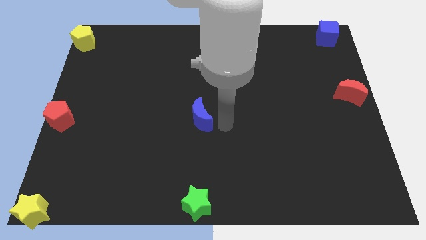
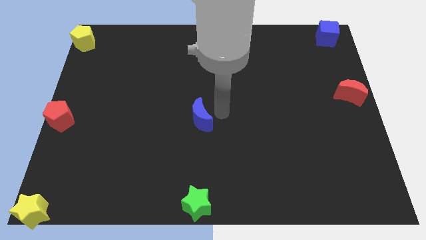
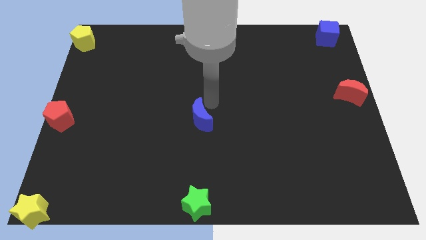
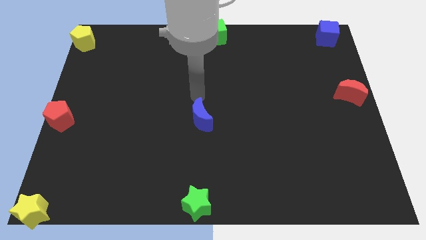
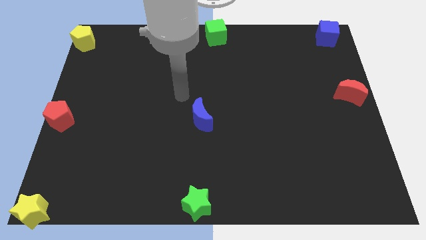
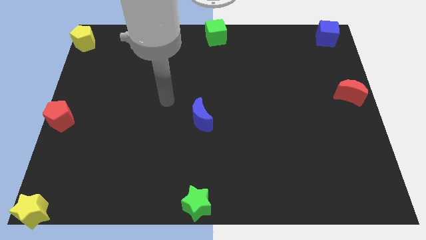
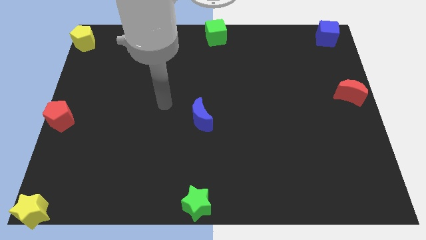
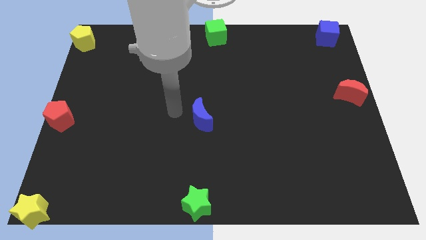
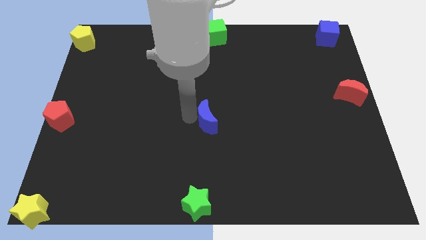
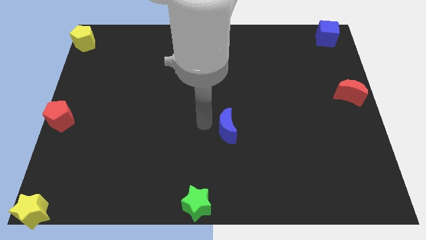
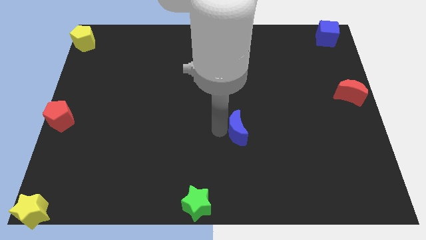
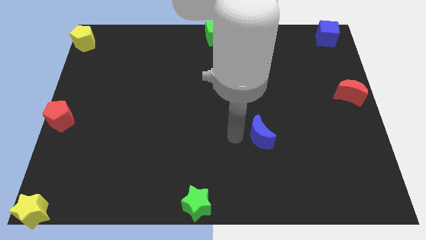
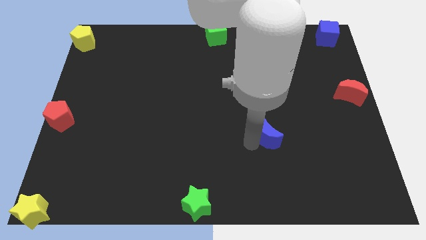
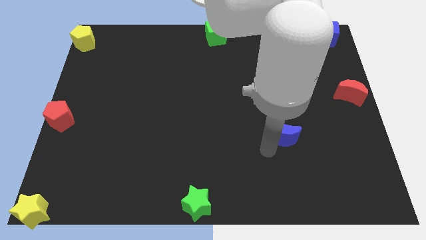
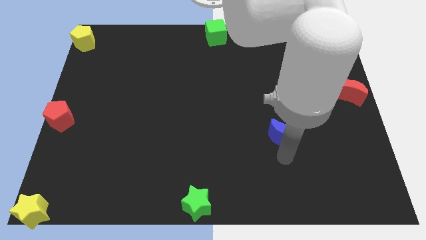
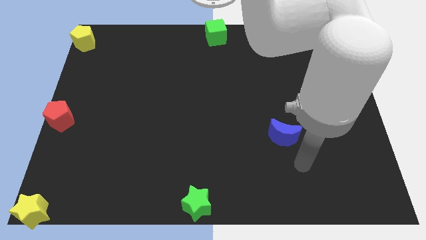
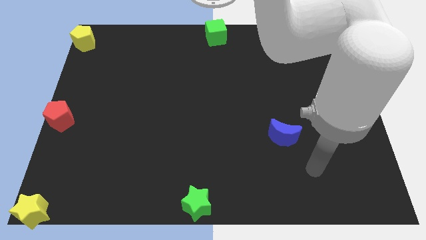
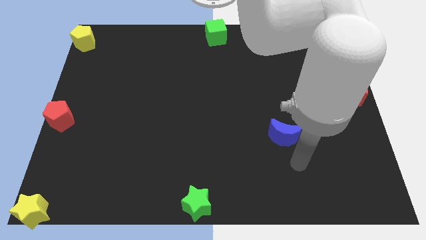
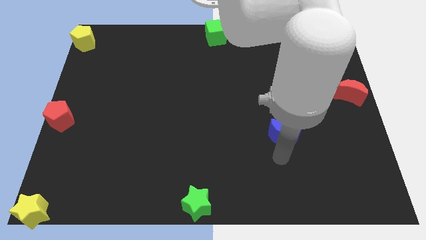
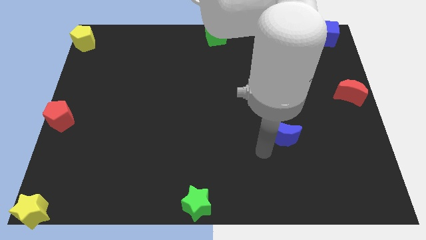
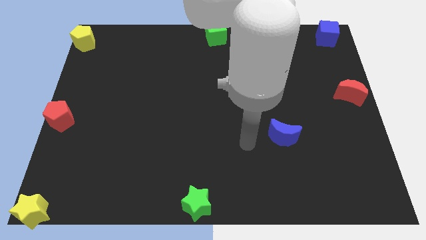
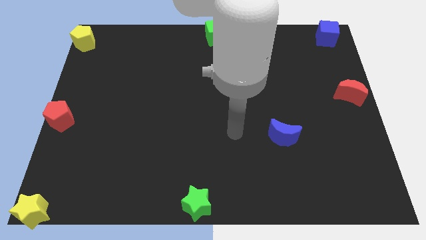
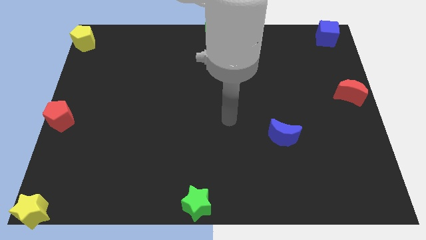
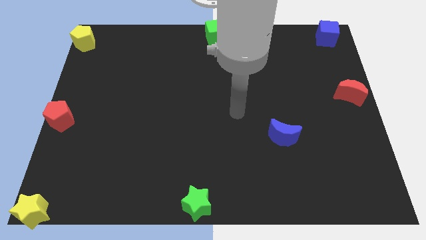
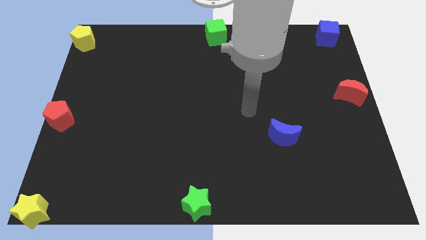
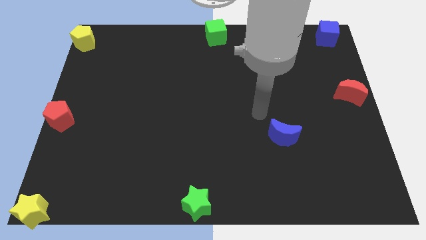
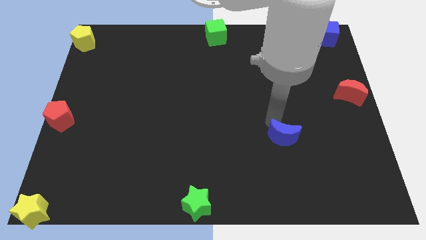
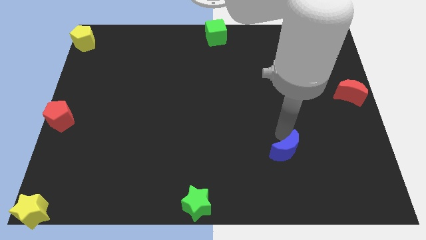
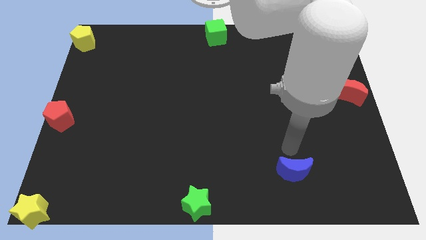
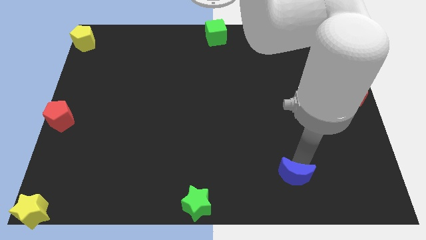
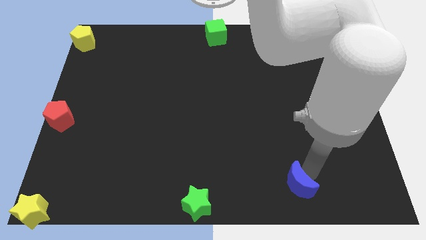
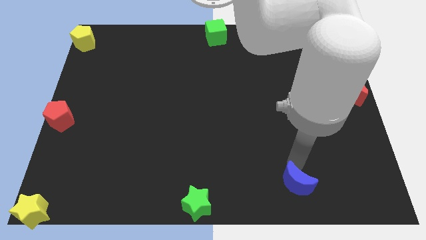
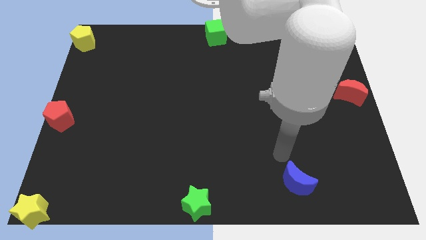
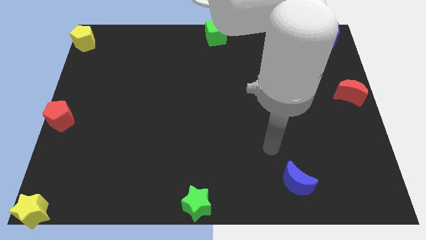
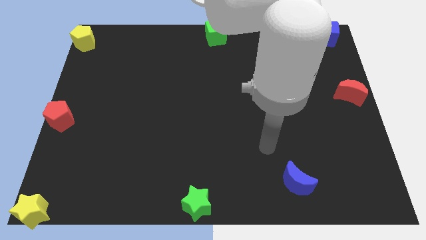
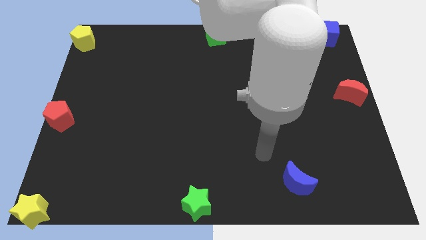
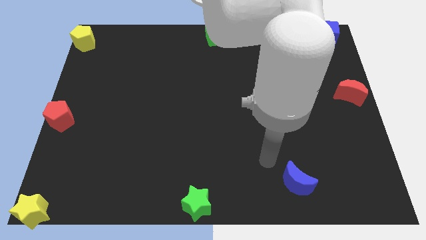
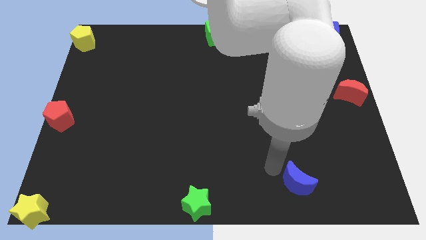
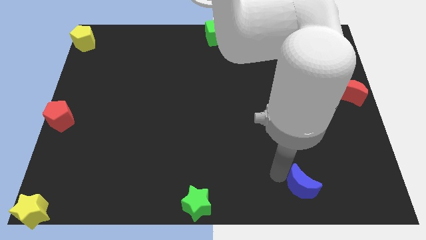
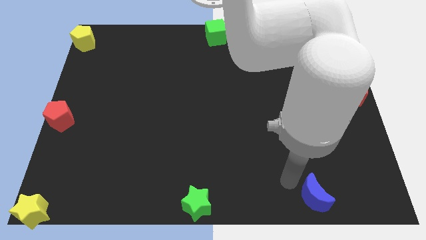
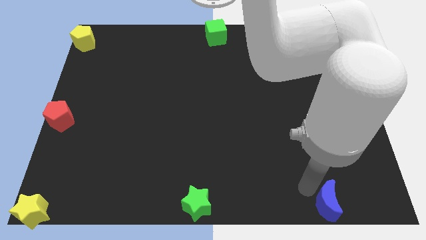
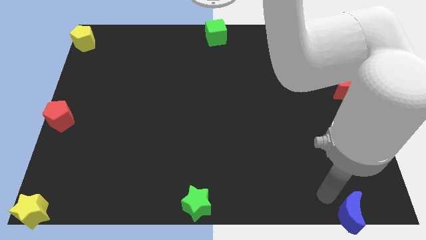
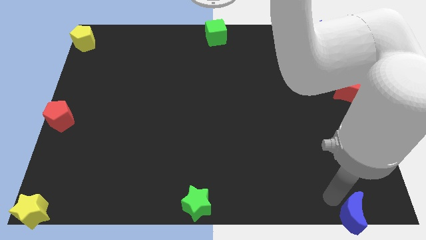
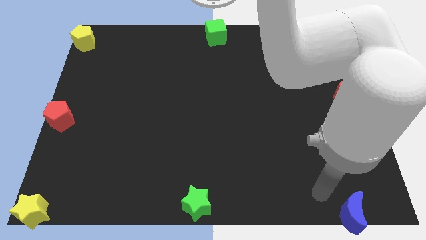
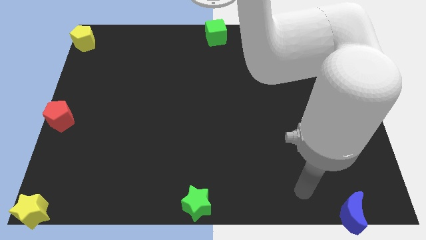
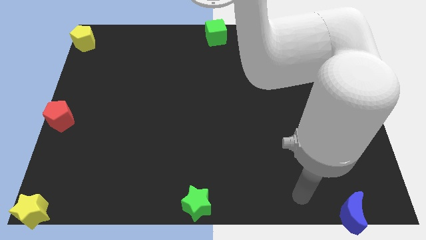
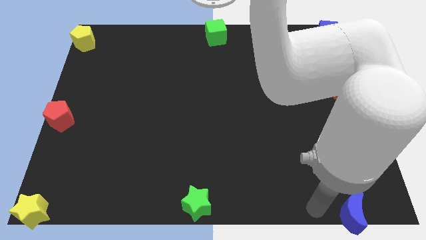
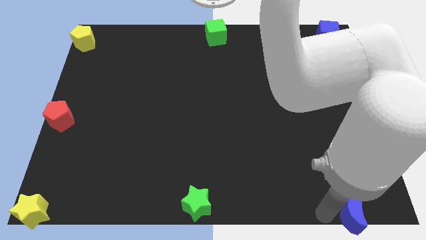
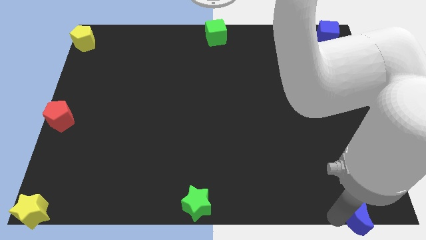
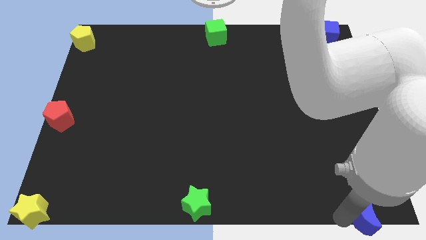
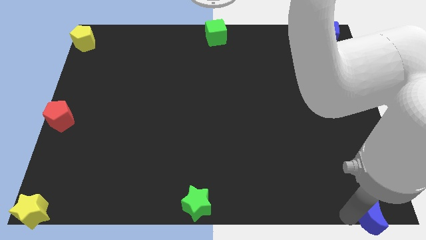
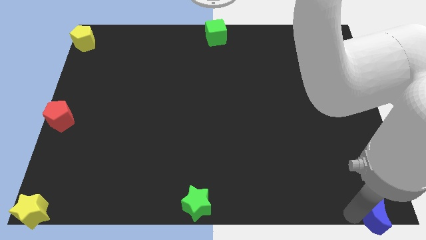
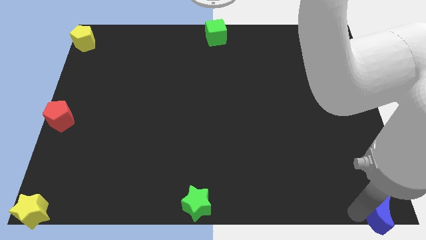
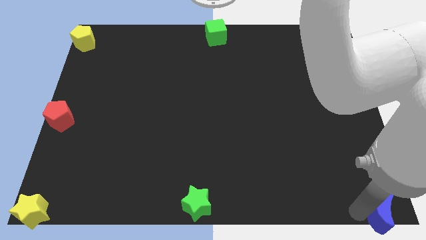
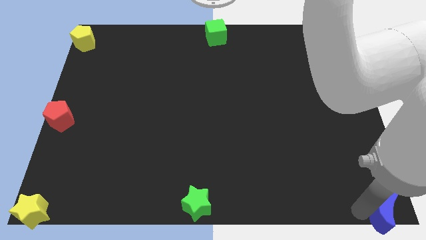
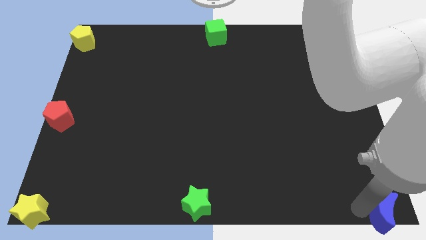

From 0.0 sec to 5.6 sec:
move the blue crescent to the bottom right corner of the board

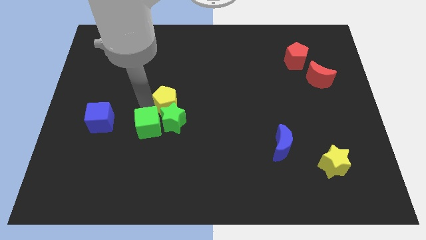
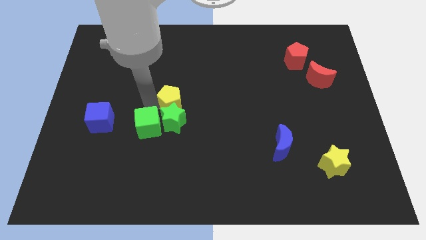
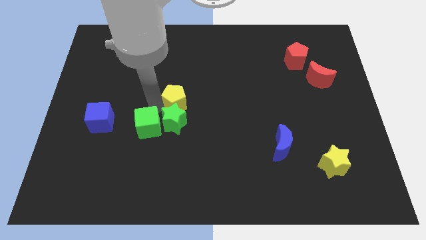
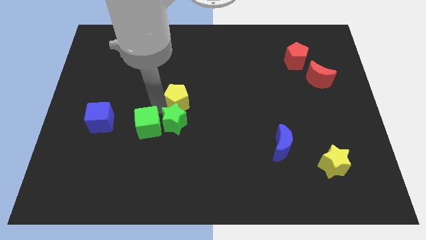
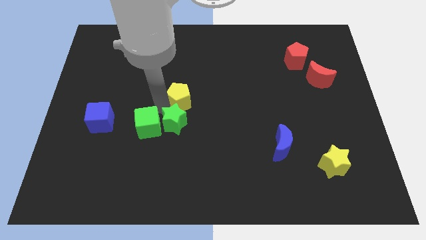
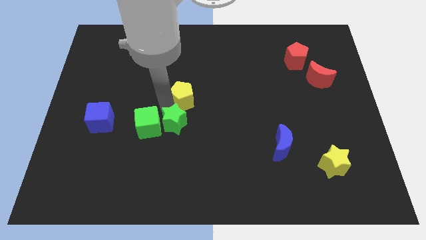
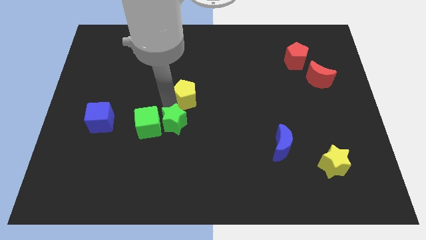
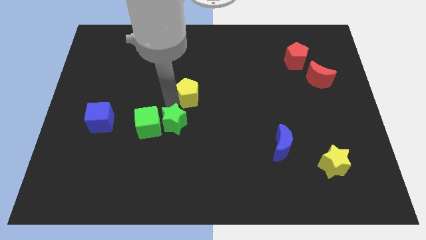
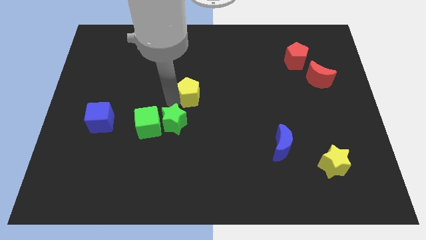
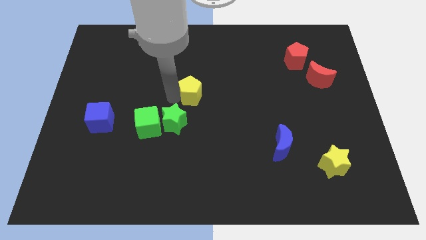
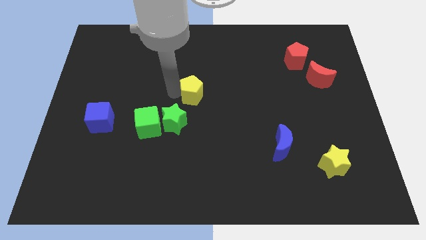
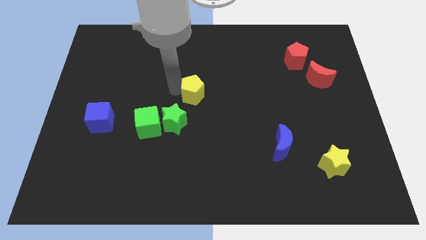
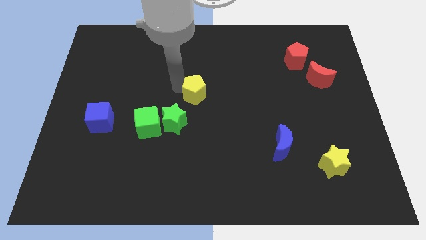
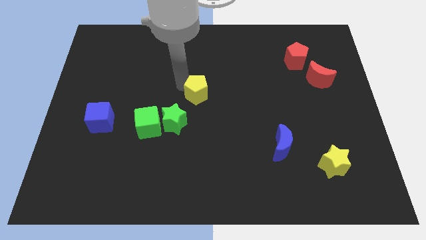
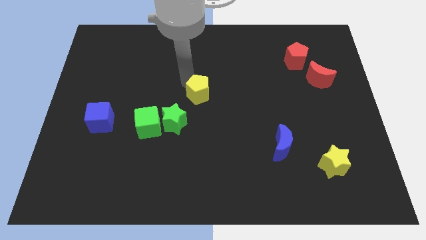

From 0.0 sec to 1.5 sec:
separate the yellow star from the green star and green cube

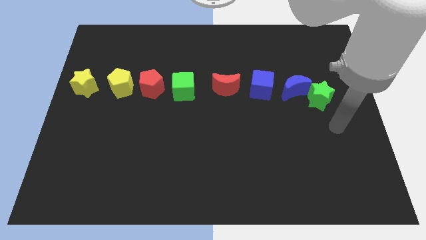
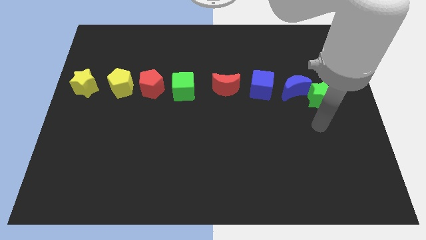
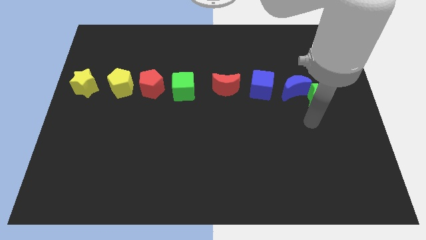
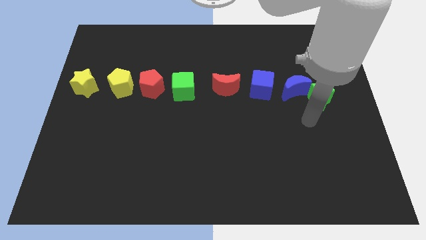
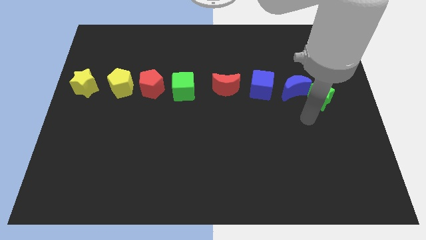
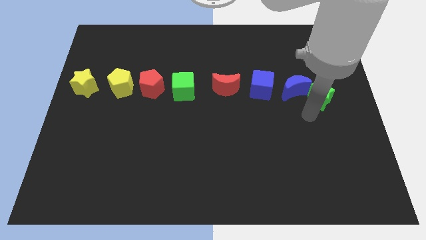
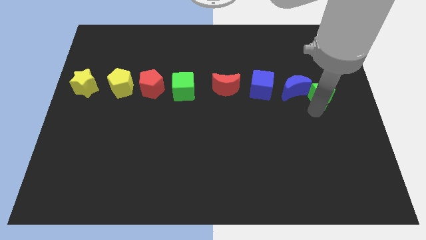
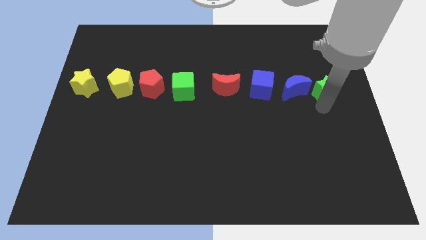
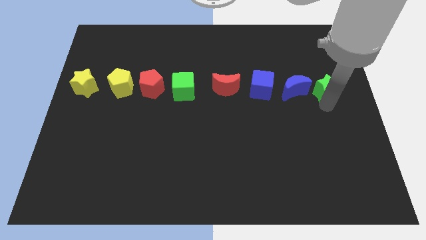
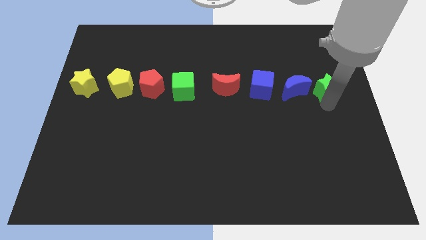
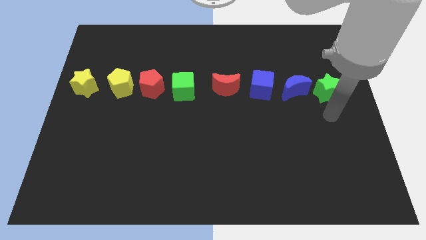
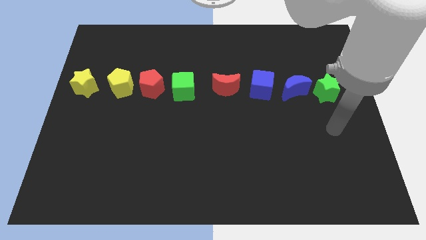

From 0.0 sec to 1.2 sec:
move the green star to the top of the board

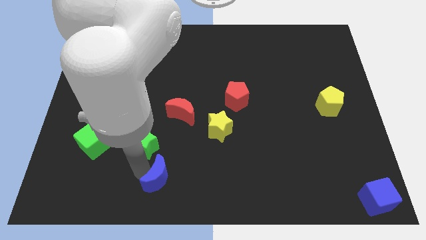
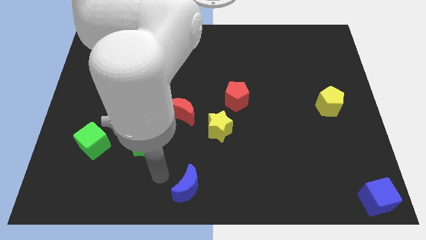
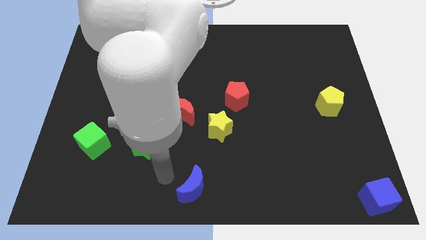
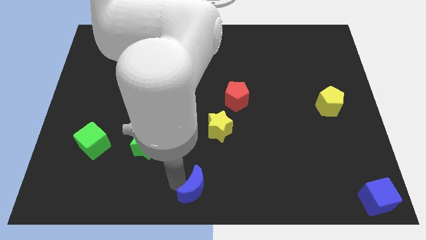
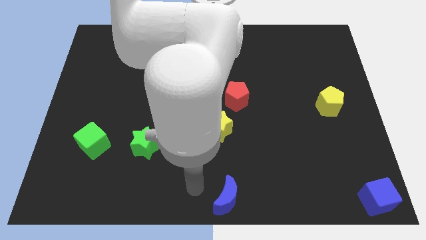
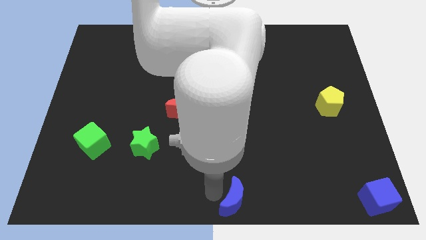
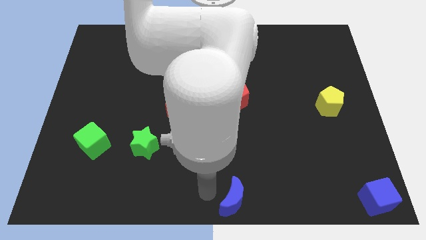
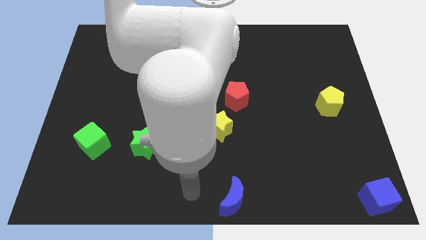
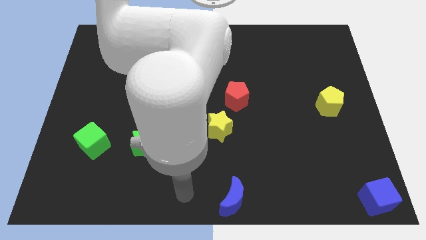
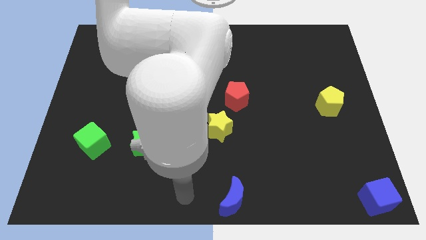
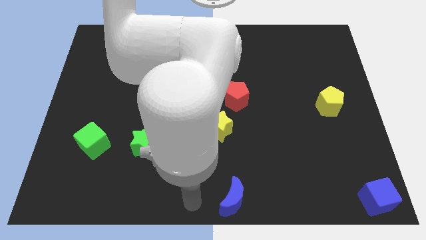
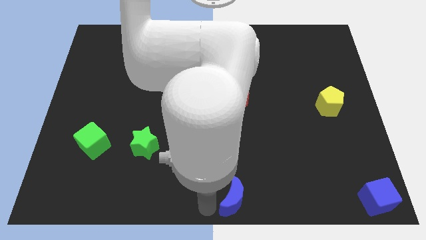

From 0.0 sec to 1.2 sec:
slide the blue moon to the bottom center
